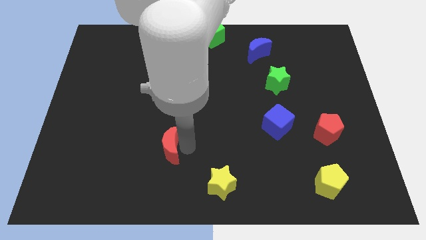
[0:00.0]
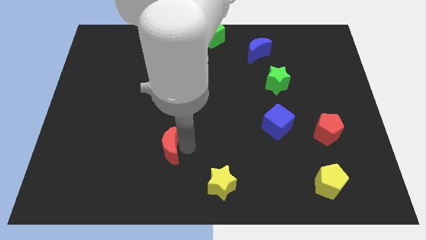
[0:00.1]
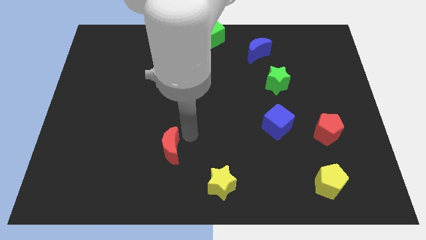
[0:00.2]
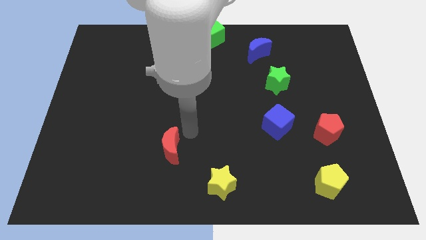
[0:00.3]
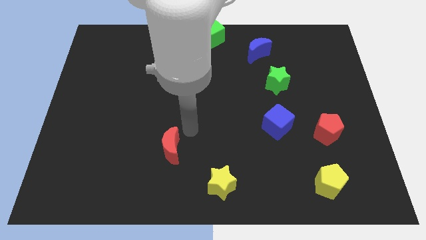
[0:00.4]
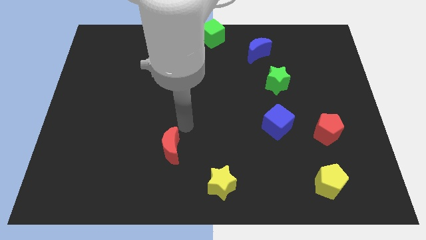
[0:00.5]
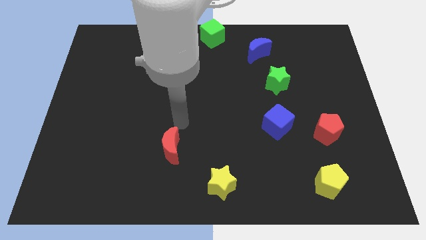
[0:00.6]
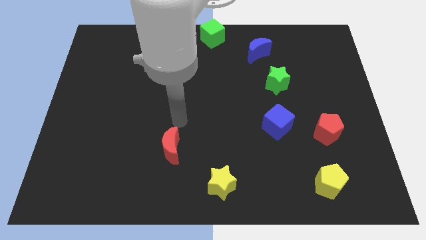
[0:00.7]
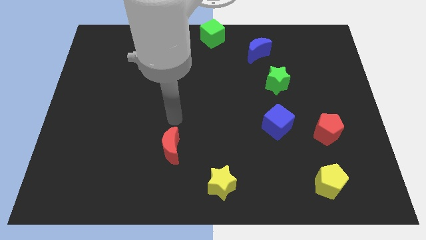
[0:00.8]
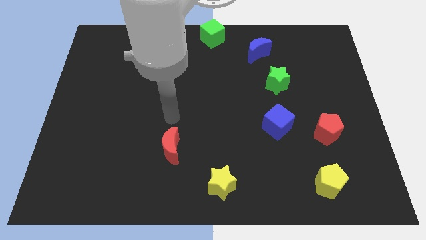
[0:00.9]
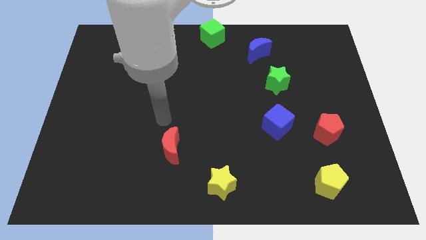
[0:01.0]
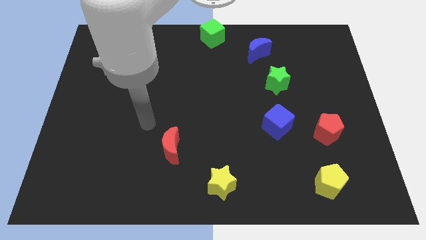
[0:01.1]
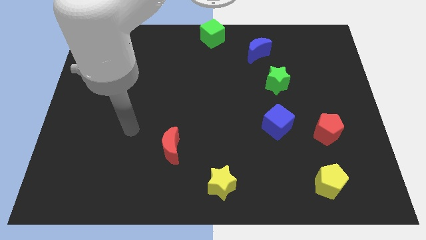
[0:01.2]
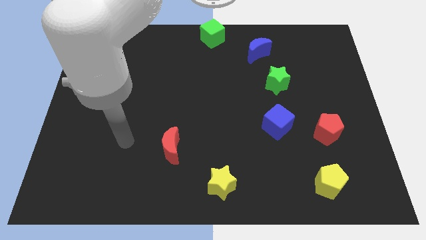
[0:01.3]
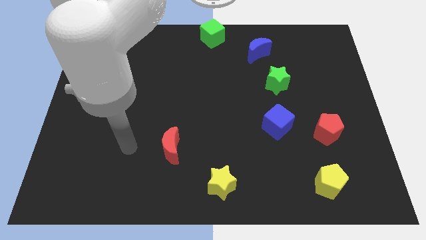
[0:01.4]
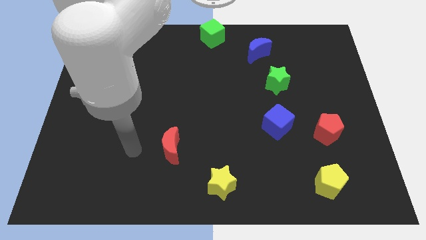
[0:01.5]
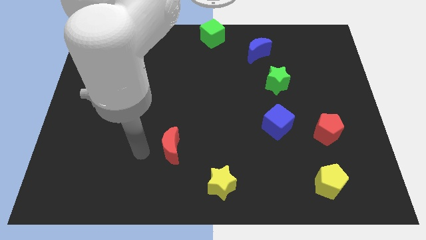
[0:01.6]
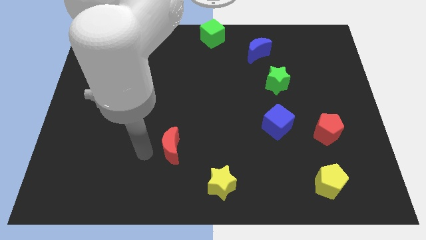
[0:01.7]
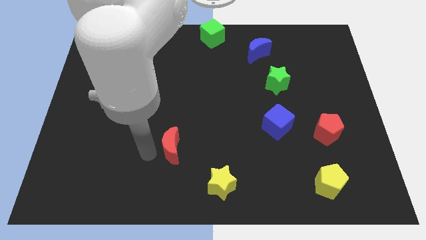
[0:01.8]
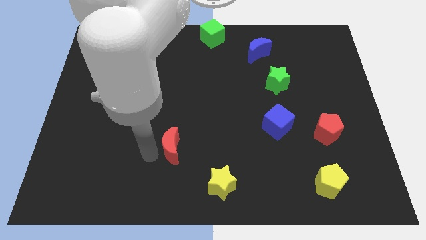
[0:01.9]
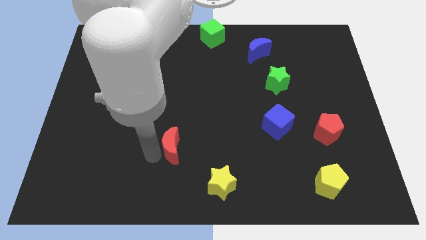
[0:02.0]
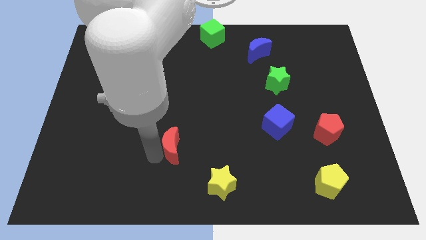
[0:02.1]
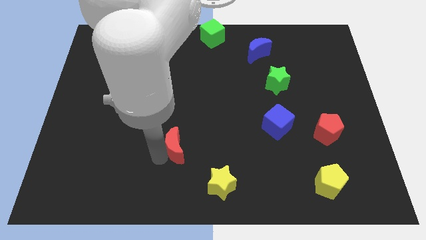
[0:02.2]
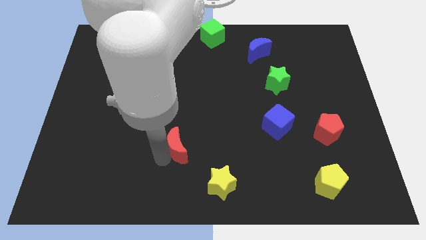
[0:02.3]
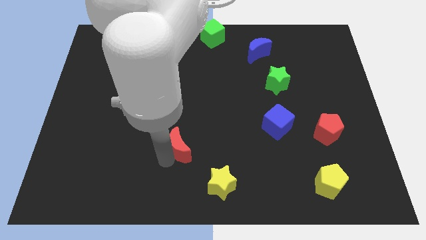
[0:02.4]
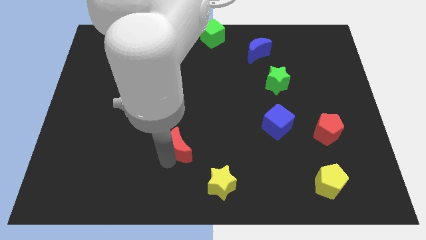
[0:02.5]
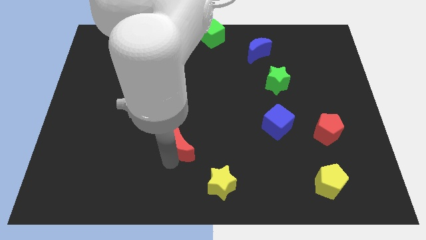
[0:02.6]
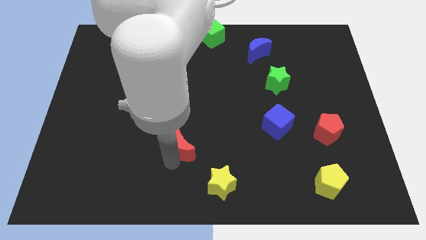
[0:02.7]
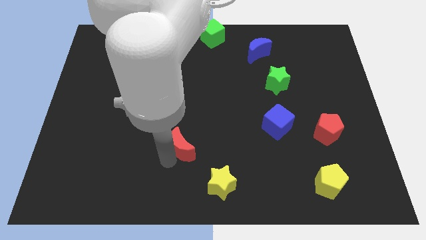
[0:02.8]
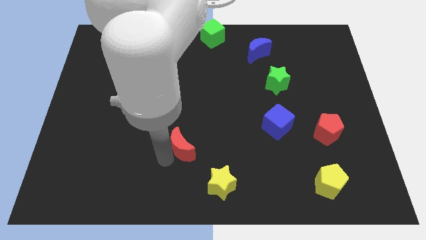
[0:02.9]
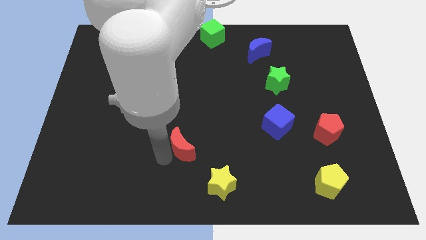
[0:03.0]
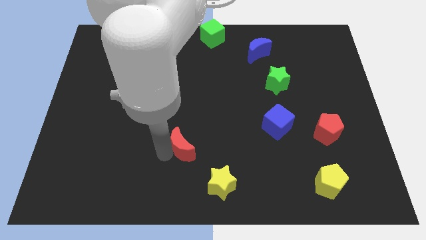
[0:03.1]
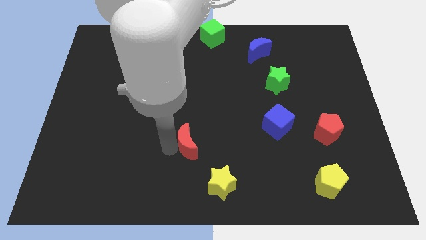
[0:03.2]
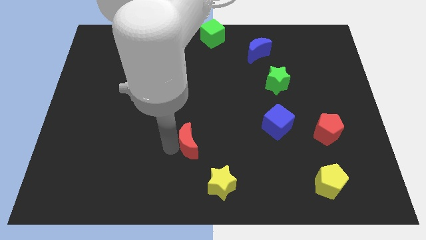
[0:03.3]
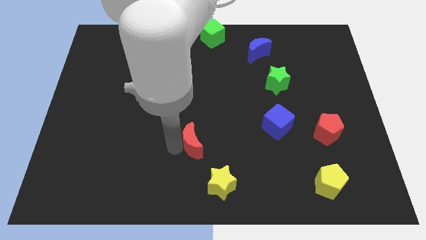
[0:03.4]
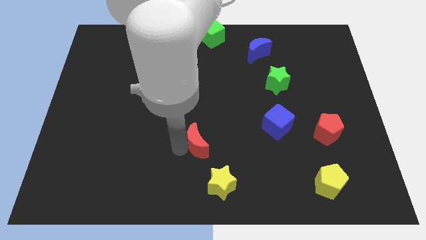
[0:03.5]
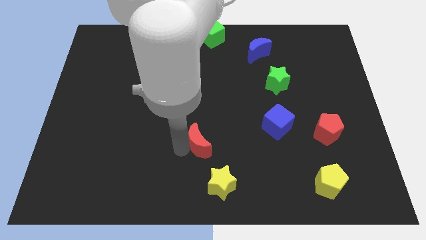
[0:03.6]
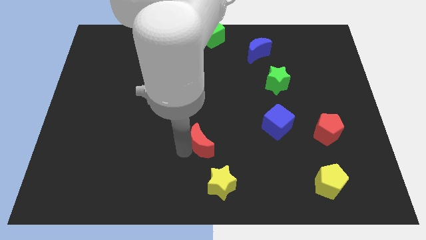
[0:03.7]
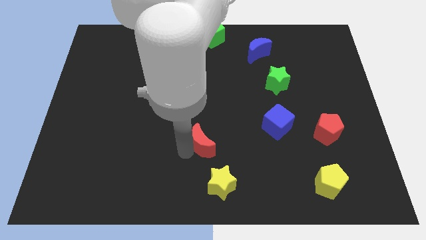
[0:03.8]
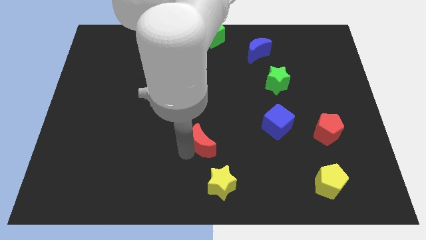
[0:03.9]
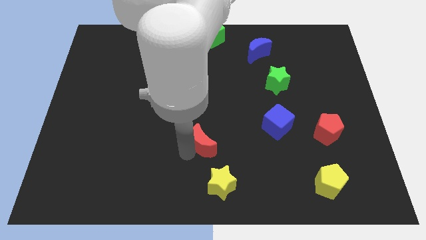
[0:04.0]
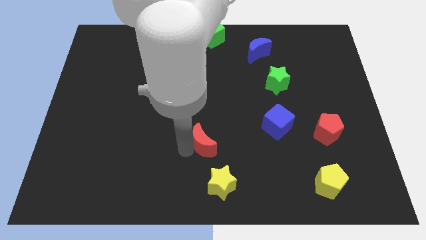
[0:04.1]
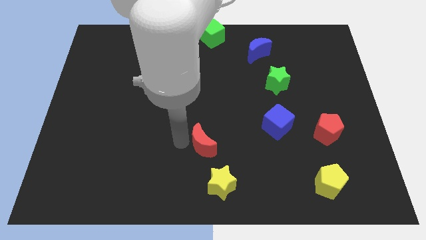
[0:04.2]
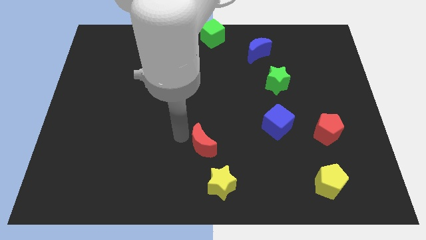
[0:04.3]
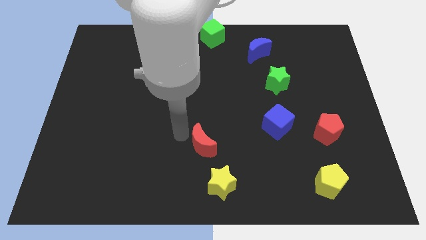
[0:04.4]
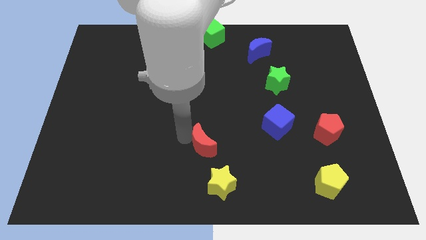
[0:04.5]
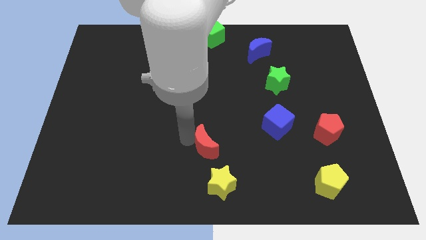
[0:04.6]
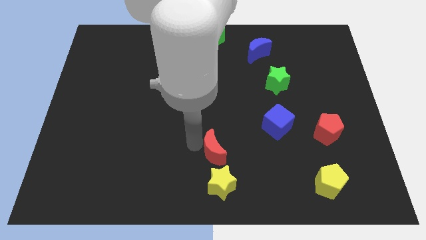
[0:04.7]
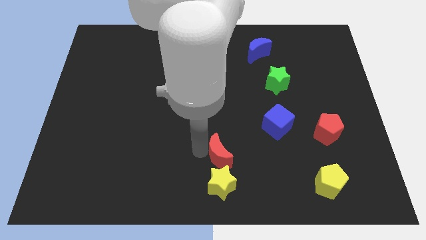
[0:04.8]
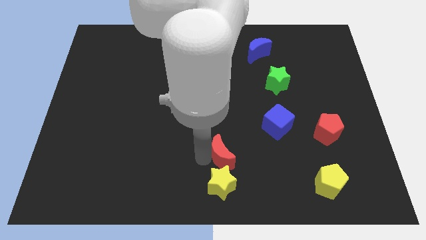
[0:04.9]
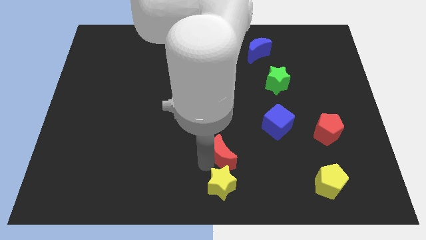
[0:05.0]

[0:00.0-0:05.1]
place the red moon at the top of yellow star

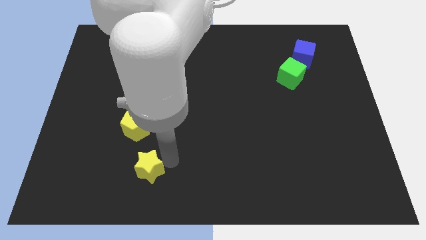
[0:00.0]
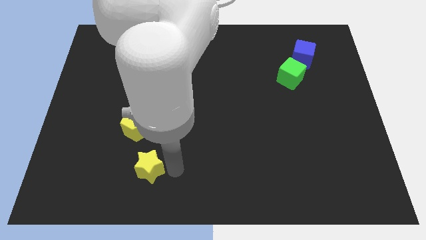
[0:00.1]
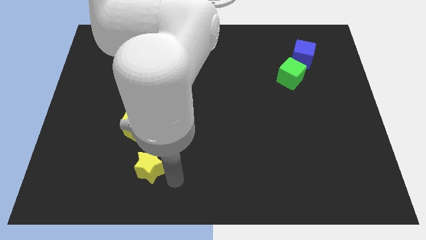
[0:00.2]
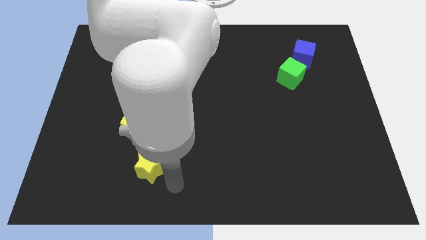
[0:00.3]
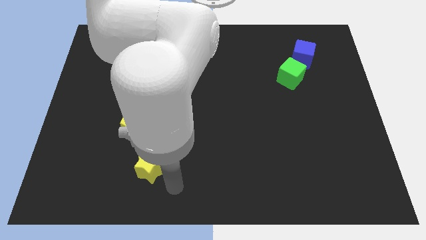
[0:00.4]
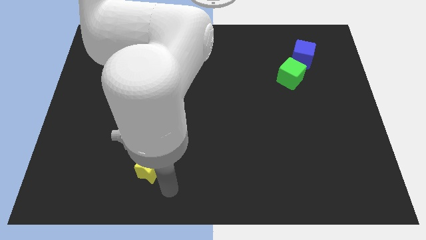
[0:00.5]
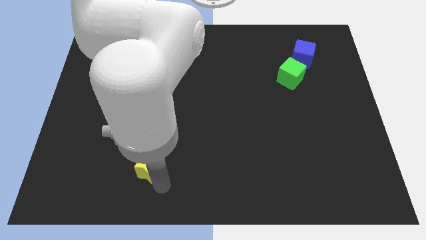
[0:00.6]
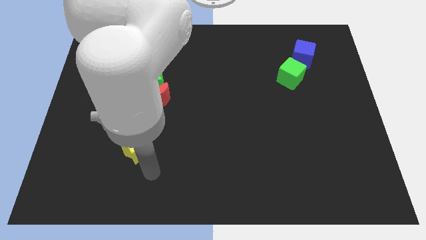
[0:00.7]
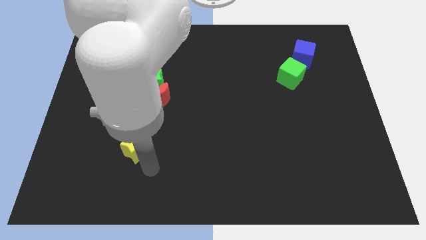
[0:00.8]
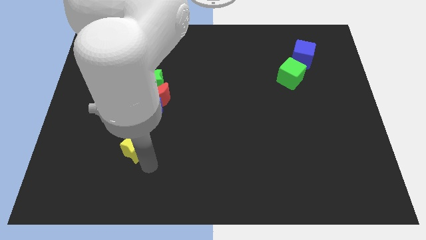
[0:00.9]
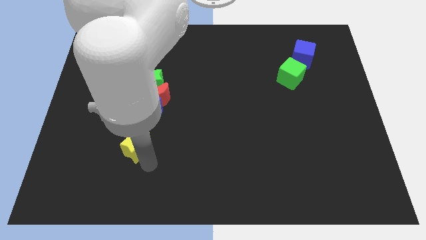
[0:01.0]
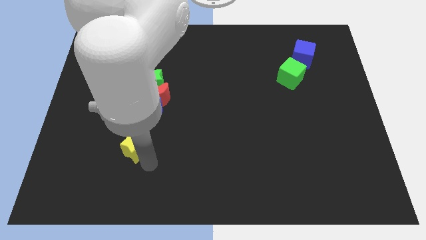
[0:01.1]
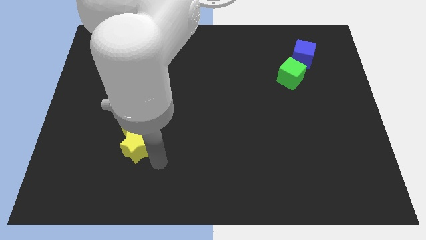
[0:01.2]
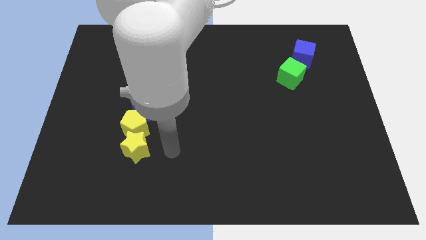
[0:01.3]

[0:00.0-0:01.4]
move the yellow star underneath the yellow pentagon

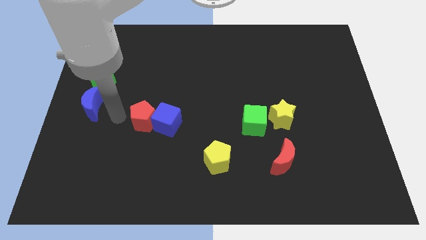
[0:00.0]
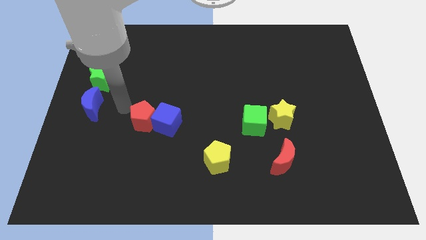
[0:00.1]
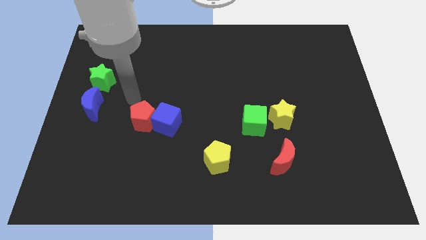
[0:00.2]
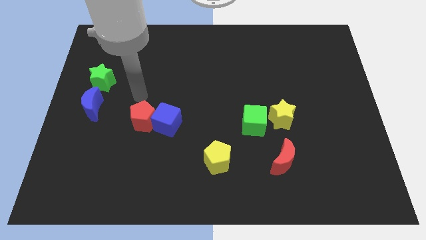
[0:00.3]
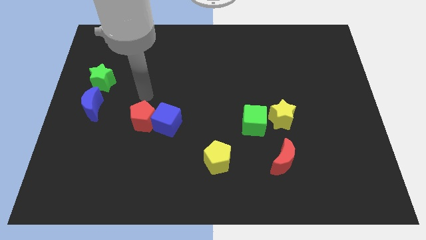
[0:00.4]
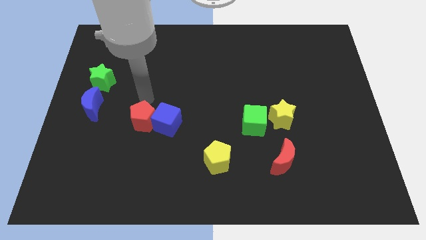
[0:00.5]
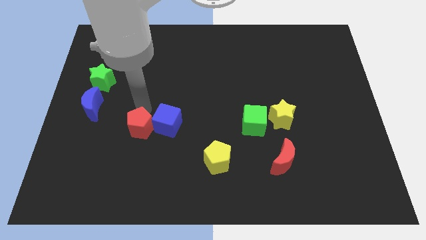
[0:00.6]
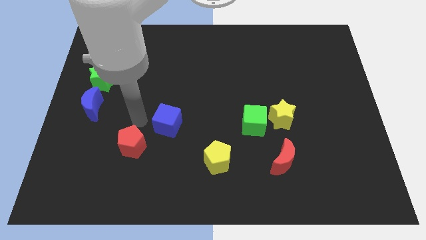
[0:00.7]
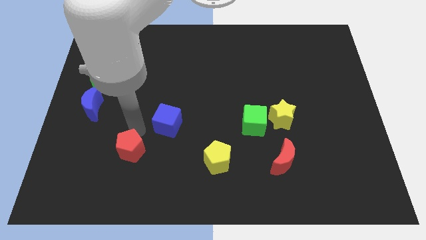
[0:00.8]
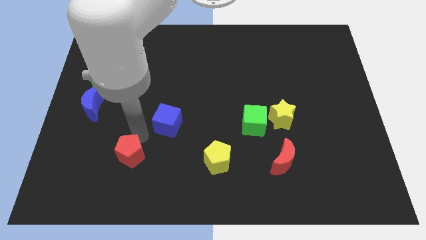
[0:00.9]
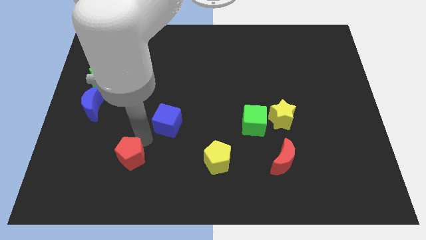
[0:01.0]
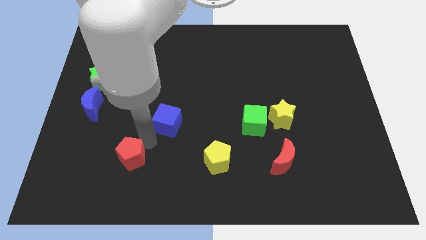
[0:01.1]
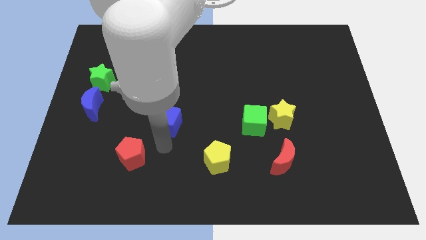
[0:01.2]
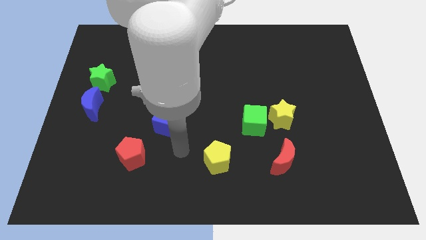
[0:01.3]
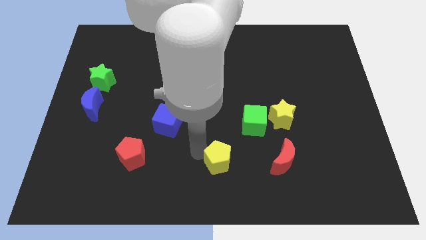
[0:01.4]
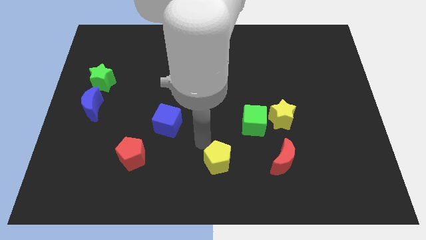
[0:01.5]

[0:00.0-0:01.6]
push the red pentagon away from the blue cube

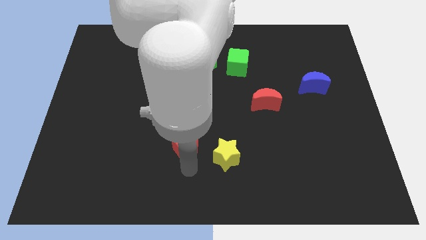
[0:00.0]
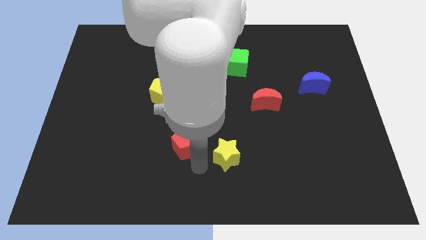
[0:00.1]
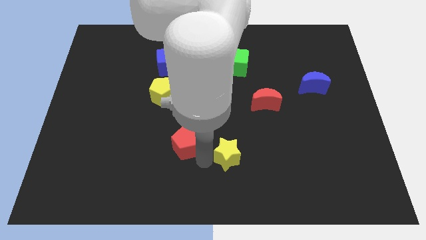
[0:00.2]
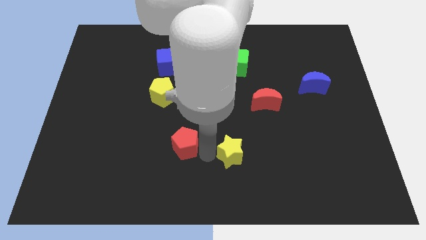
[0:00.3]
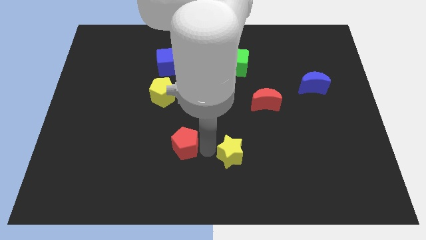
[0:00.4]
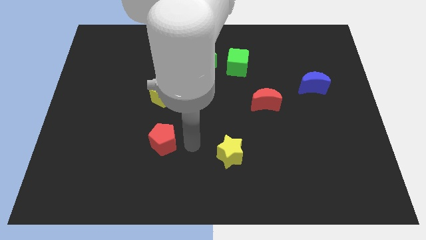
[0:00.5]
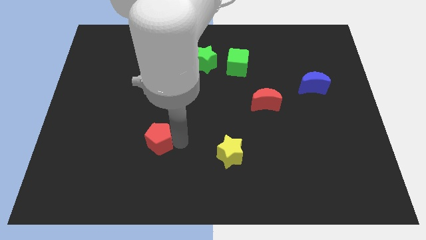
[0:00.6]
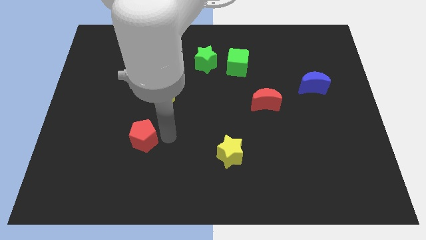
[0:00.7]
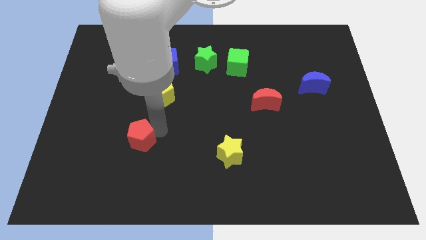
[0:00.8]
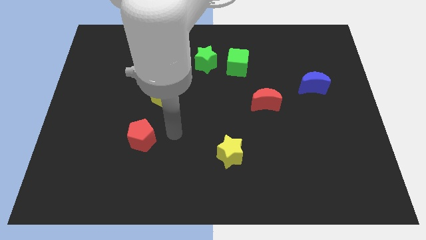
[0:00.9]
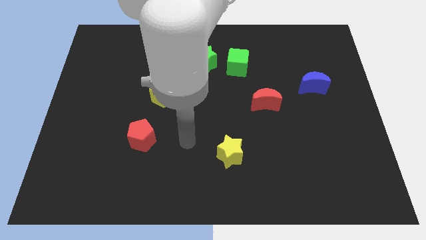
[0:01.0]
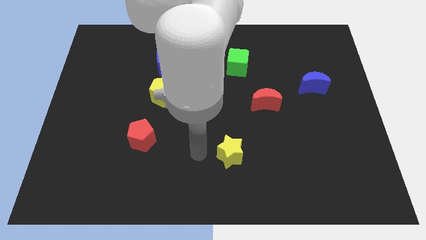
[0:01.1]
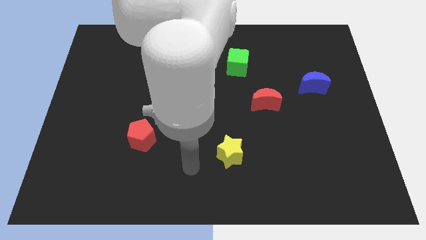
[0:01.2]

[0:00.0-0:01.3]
separate red pentagon from yellow star
